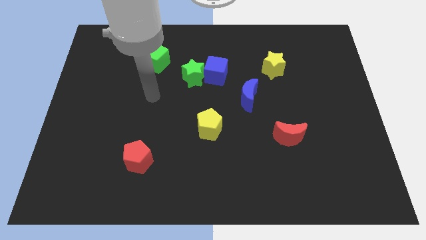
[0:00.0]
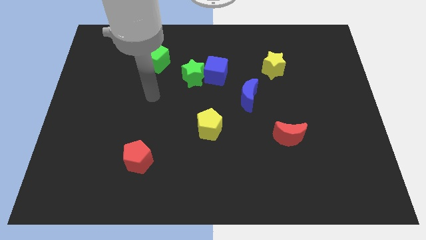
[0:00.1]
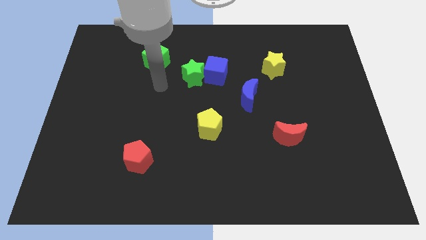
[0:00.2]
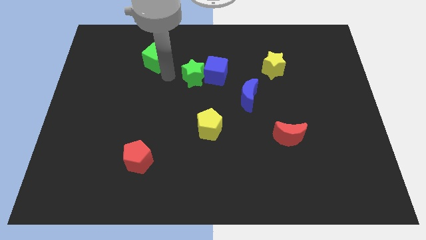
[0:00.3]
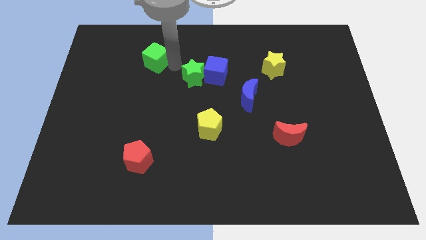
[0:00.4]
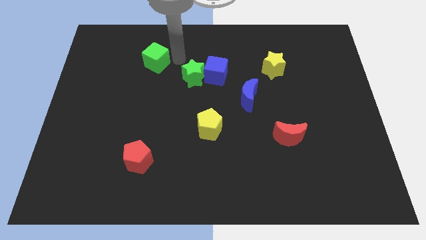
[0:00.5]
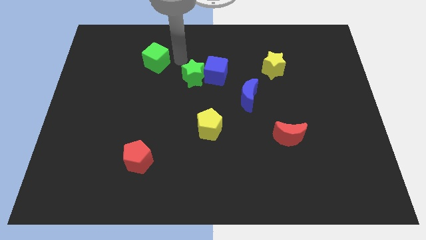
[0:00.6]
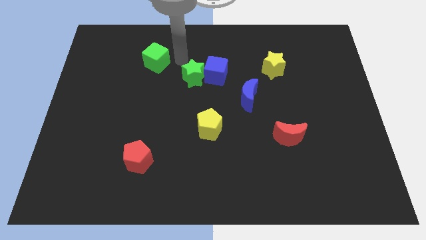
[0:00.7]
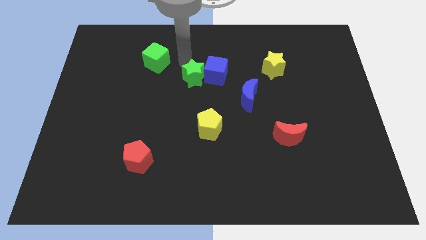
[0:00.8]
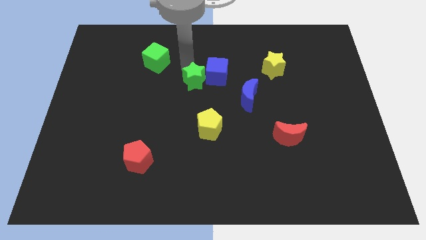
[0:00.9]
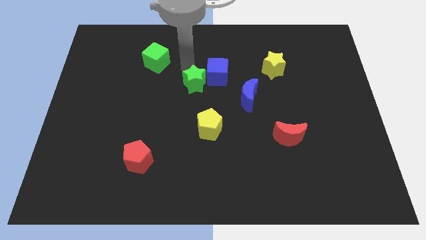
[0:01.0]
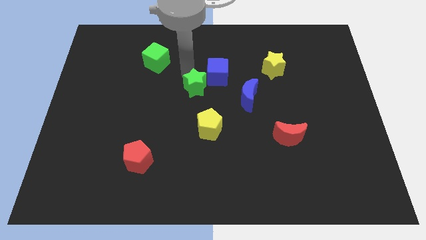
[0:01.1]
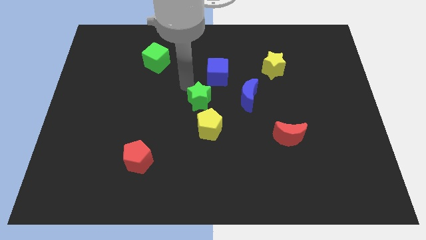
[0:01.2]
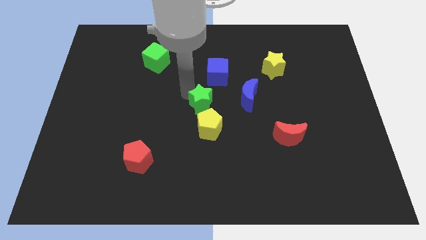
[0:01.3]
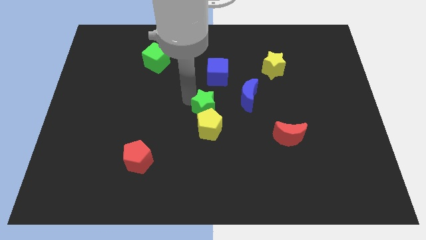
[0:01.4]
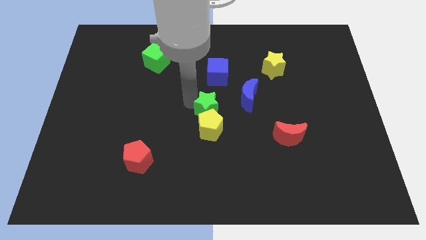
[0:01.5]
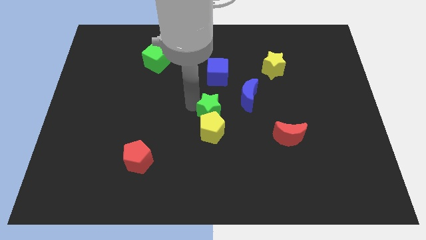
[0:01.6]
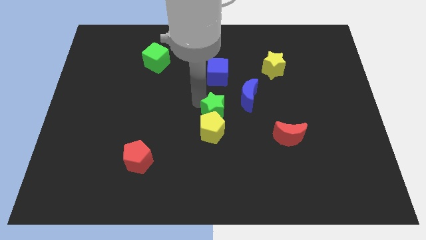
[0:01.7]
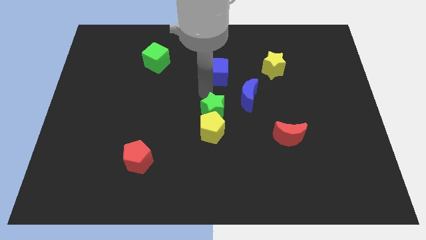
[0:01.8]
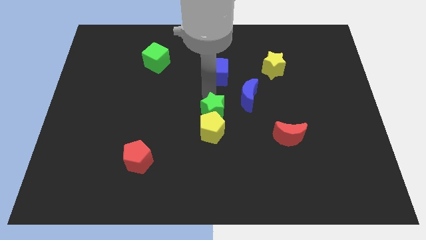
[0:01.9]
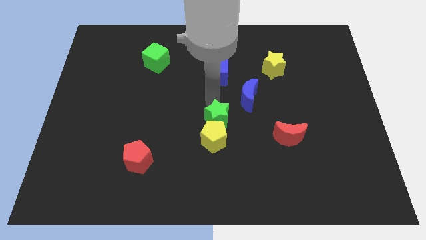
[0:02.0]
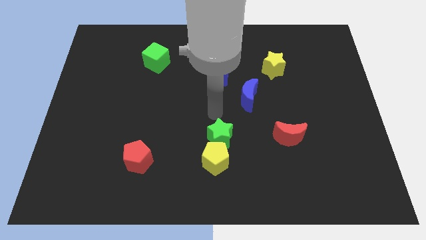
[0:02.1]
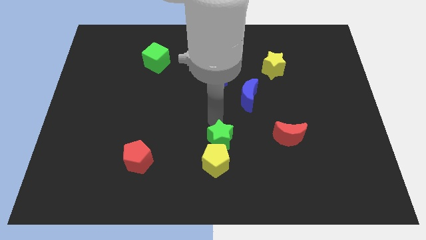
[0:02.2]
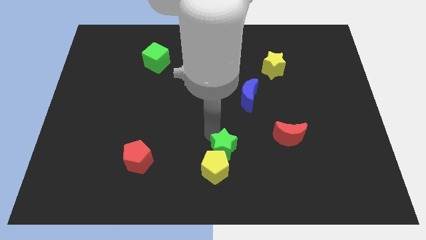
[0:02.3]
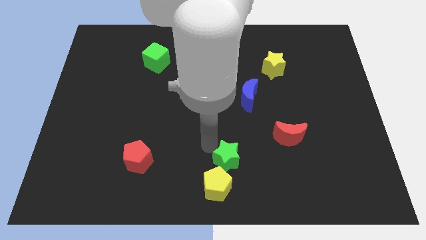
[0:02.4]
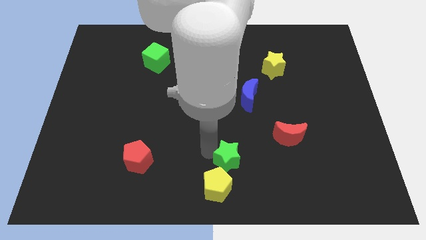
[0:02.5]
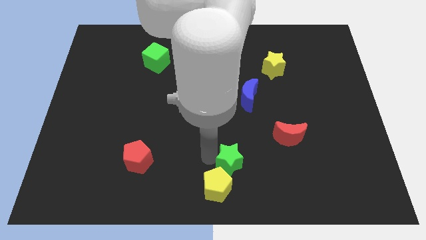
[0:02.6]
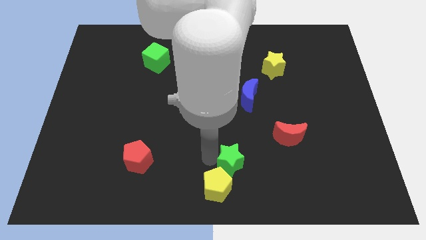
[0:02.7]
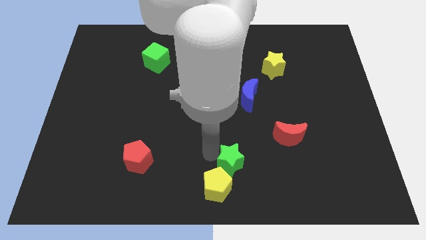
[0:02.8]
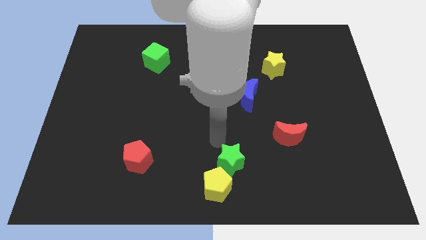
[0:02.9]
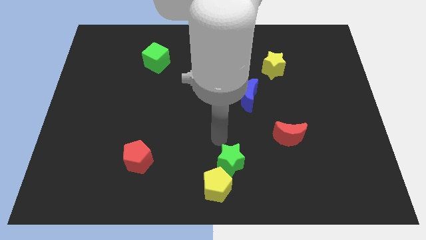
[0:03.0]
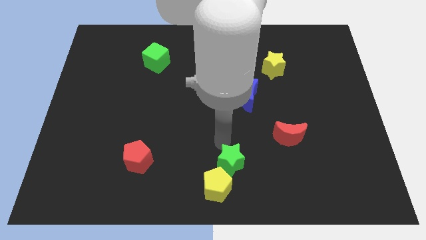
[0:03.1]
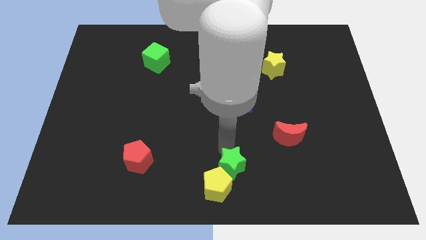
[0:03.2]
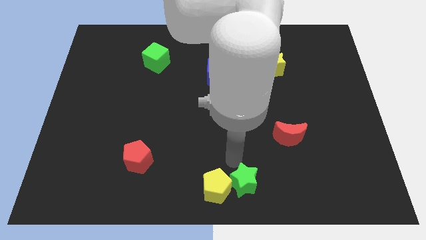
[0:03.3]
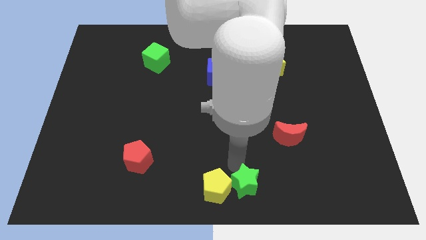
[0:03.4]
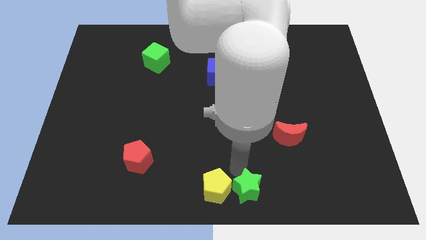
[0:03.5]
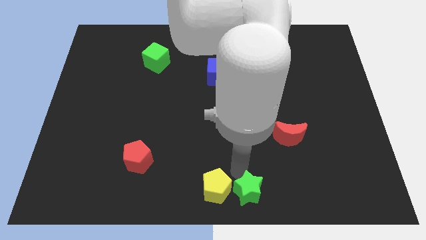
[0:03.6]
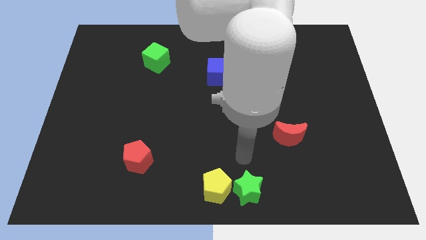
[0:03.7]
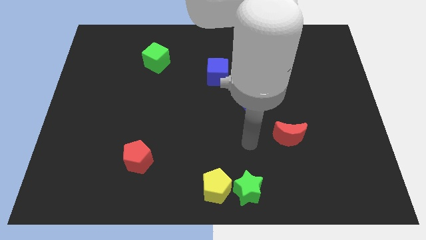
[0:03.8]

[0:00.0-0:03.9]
place the green star and yellow pentagon at the bottom center of the board

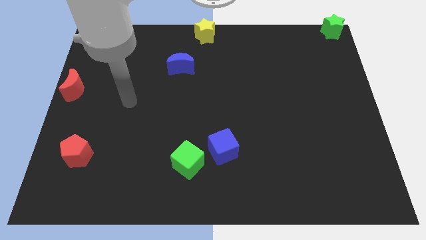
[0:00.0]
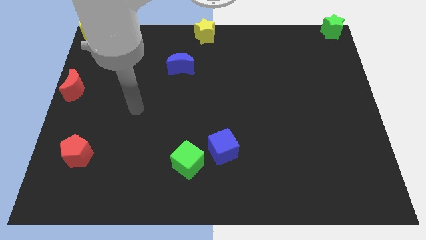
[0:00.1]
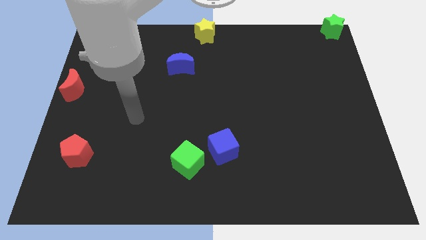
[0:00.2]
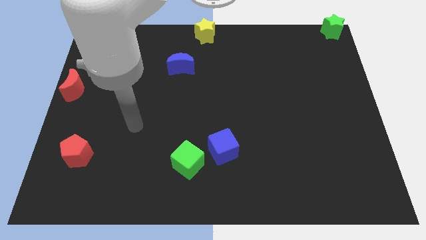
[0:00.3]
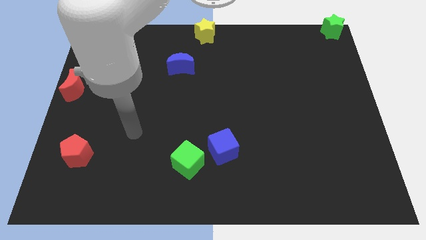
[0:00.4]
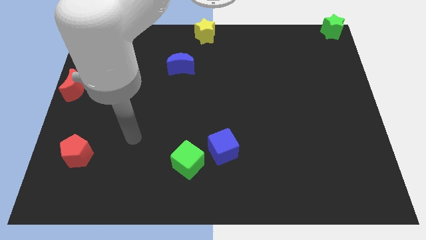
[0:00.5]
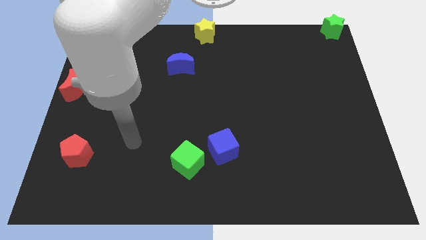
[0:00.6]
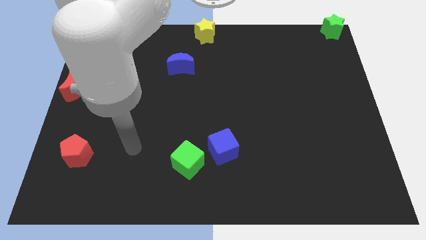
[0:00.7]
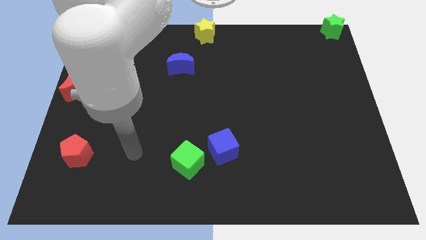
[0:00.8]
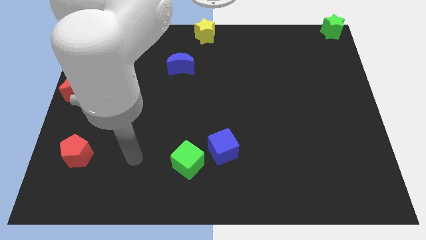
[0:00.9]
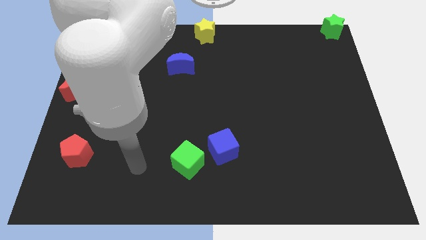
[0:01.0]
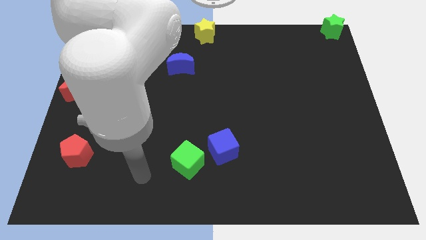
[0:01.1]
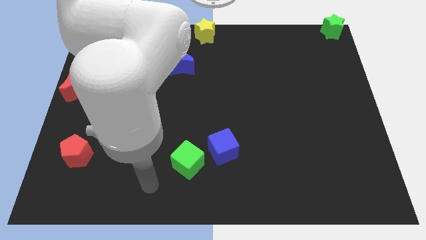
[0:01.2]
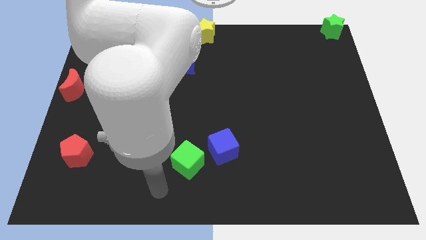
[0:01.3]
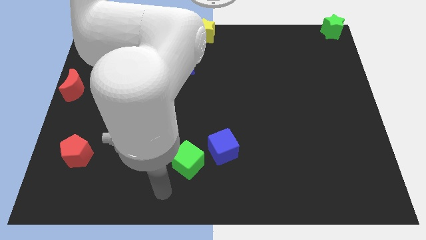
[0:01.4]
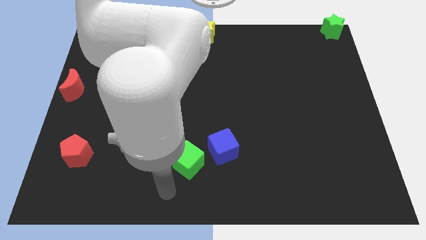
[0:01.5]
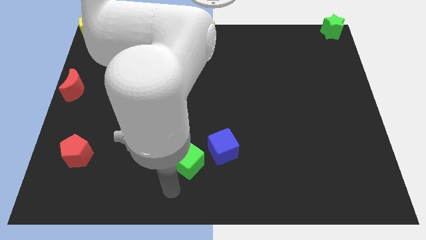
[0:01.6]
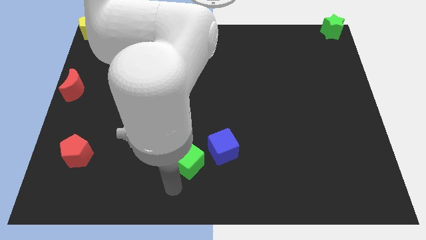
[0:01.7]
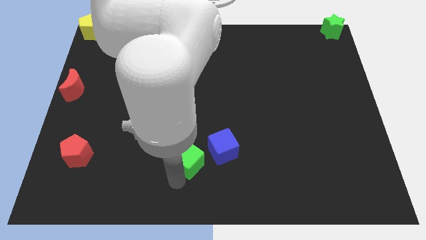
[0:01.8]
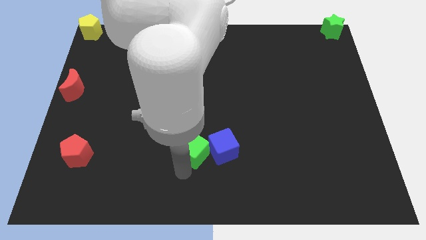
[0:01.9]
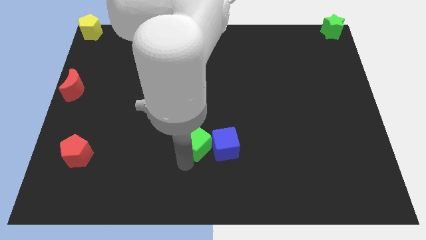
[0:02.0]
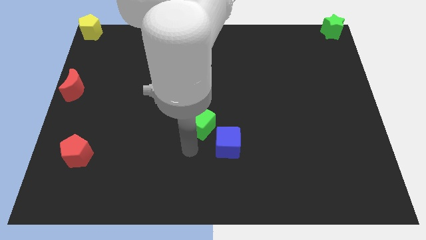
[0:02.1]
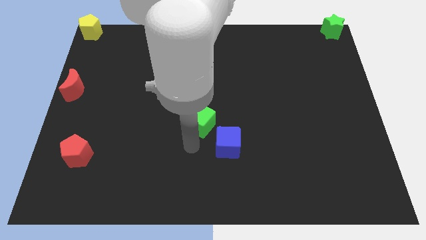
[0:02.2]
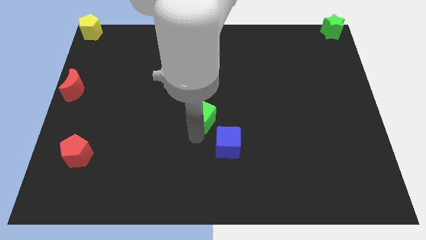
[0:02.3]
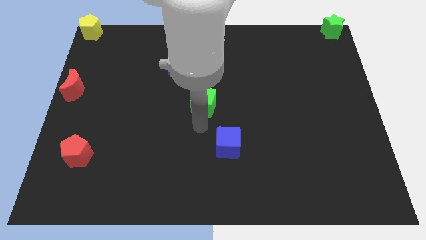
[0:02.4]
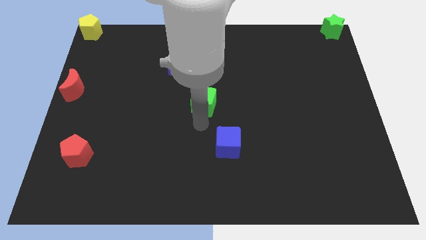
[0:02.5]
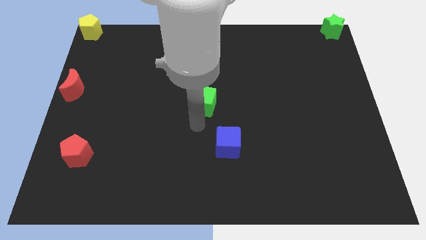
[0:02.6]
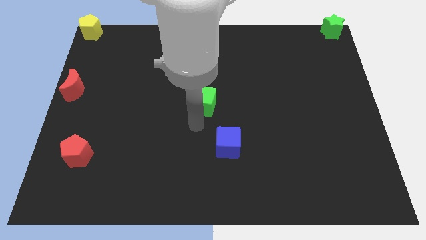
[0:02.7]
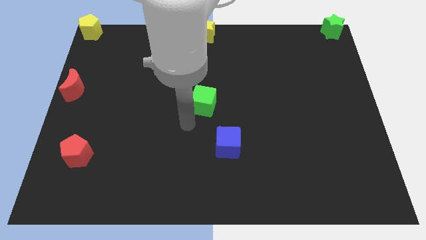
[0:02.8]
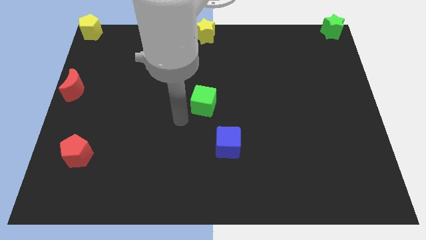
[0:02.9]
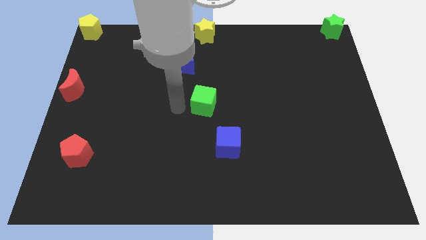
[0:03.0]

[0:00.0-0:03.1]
separate green cube from the blue cube

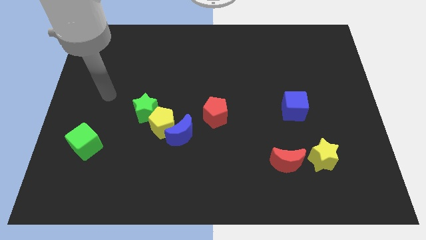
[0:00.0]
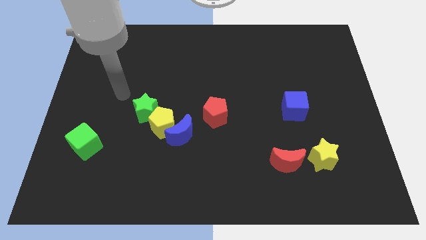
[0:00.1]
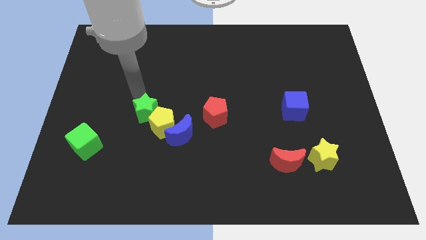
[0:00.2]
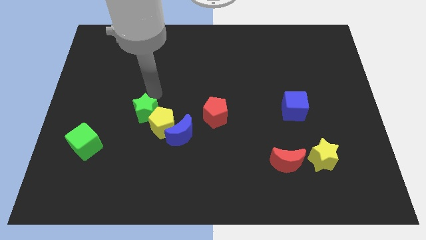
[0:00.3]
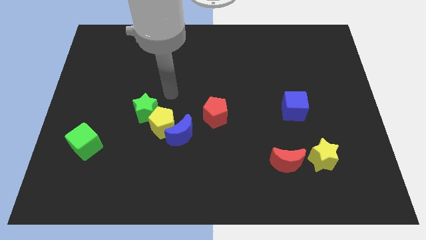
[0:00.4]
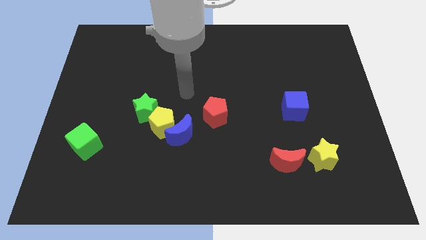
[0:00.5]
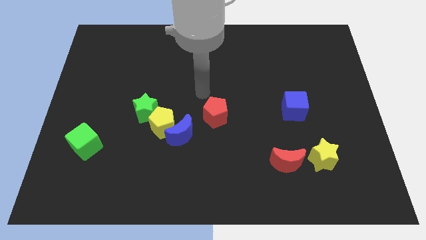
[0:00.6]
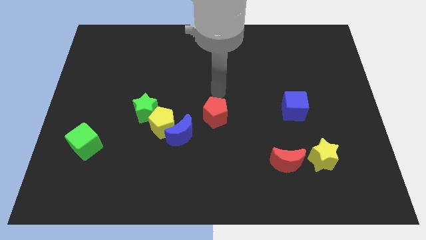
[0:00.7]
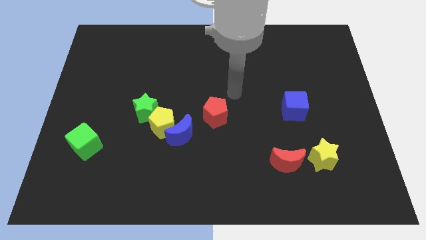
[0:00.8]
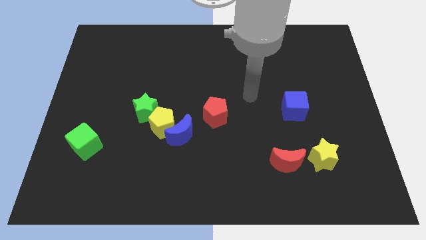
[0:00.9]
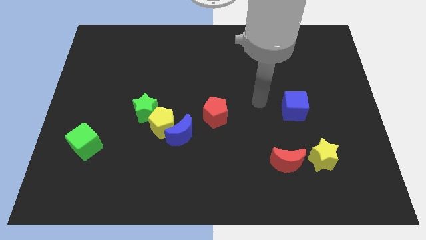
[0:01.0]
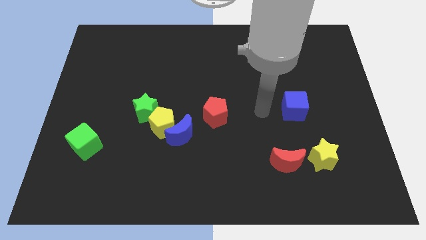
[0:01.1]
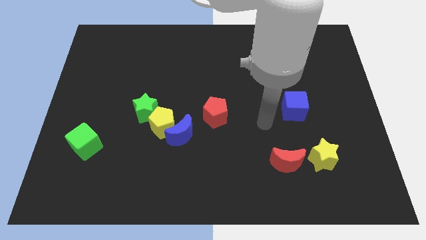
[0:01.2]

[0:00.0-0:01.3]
move your arm to the left of blue cube

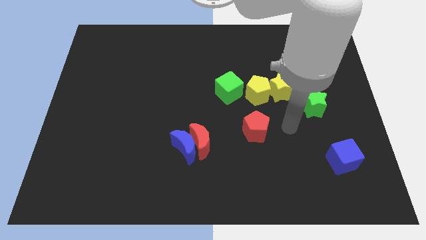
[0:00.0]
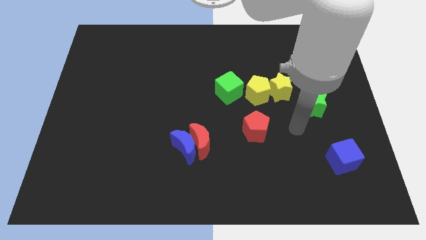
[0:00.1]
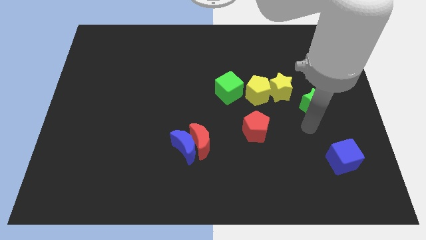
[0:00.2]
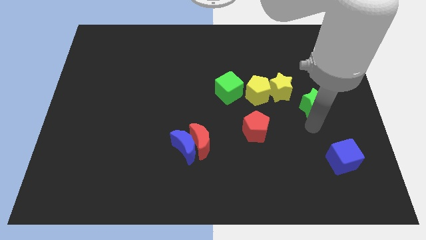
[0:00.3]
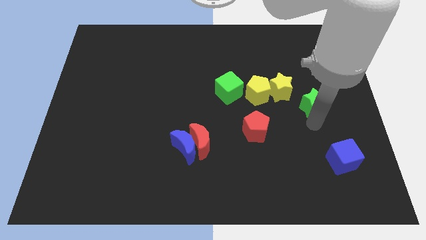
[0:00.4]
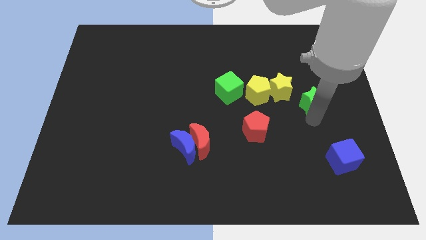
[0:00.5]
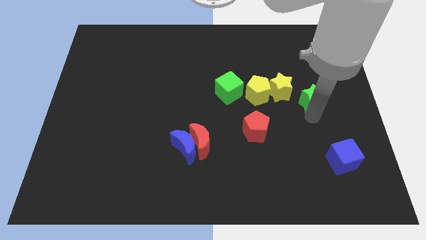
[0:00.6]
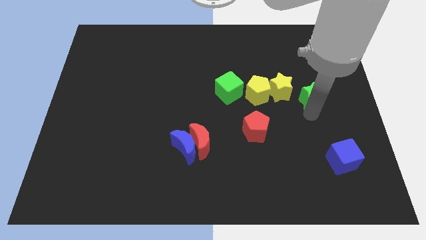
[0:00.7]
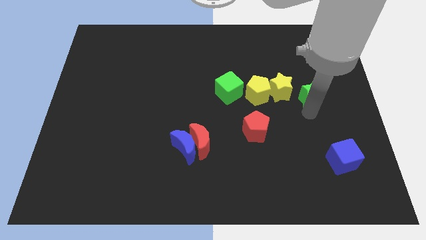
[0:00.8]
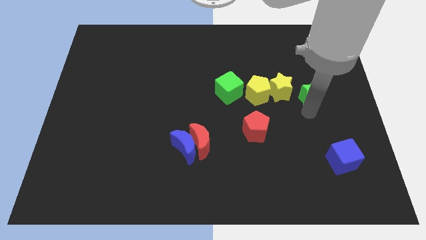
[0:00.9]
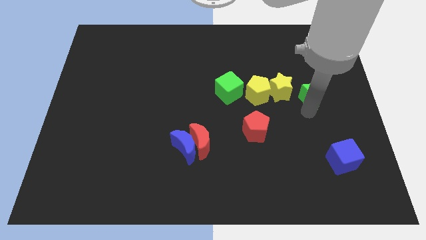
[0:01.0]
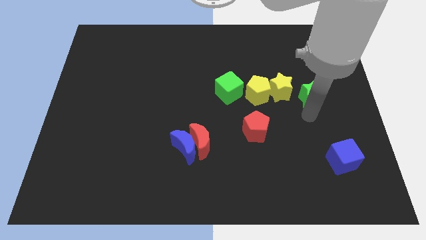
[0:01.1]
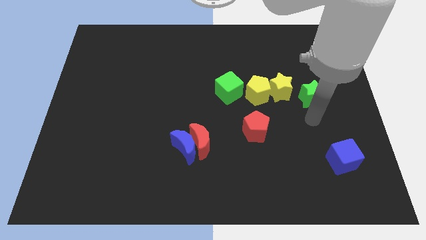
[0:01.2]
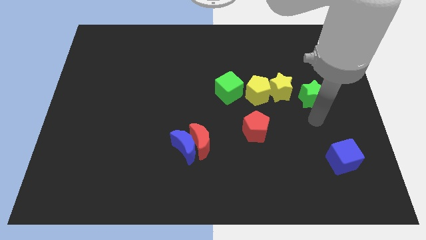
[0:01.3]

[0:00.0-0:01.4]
place the green star to the right of yellow star
